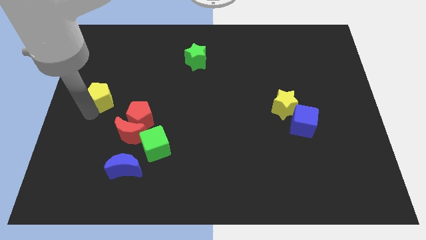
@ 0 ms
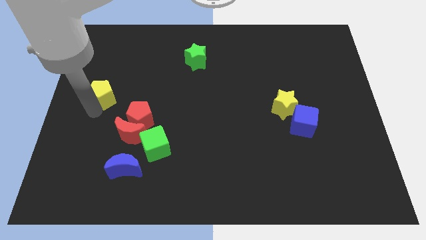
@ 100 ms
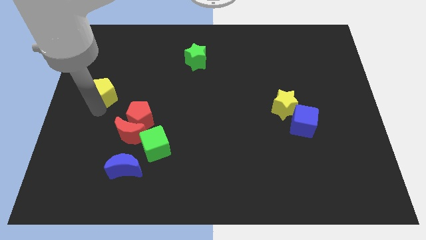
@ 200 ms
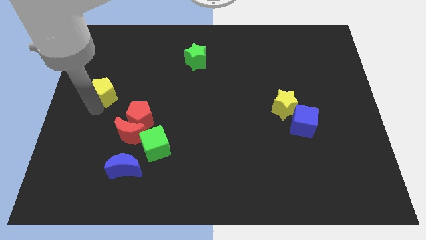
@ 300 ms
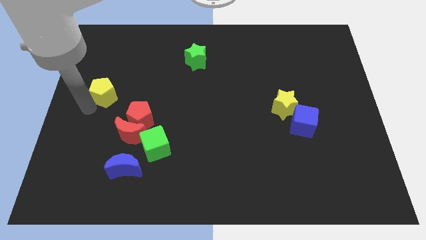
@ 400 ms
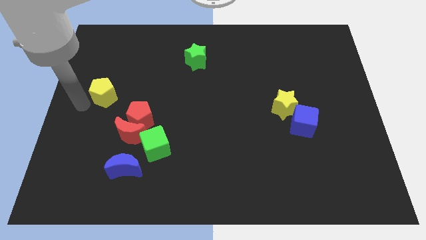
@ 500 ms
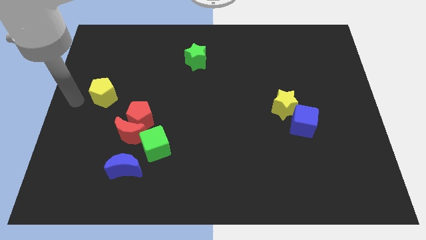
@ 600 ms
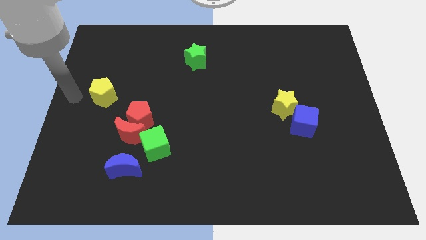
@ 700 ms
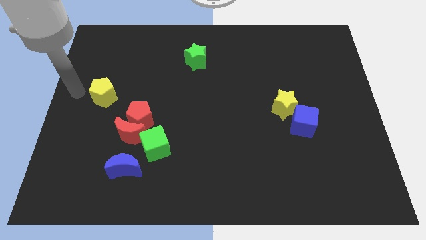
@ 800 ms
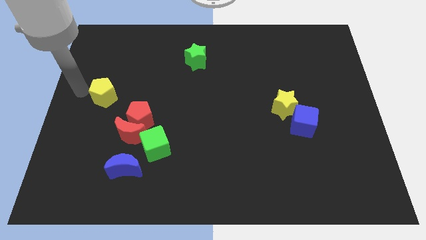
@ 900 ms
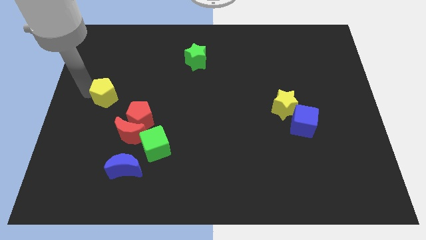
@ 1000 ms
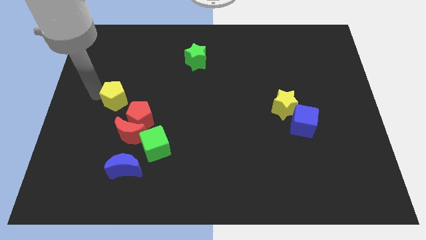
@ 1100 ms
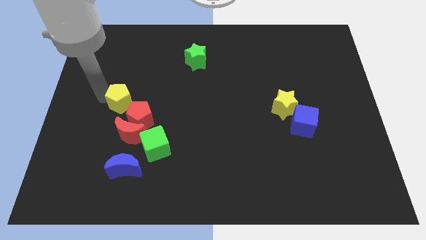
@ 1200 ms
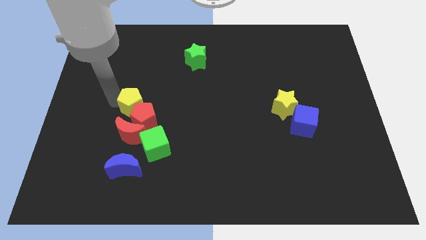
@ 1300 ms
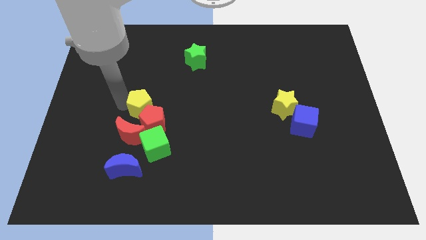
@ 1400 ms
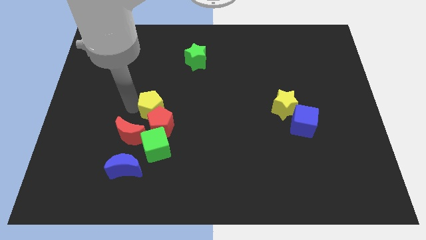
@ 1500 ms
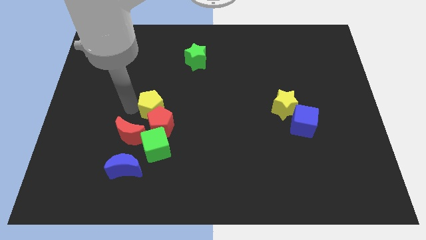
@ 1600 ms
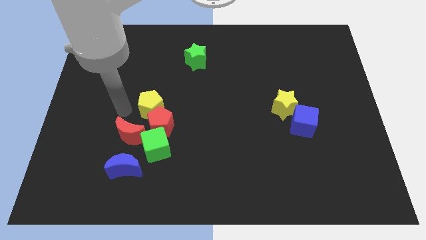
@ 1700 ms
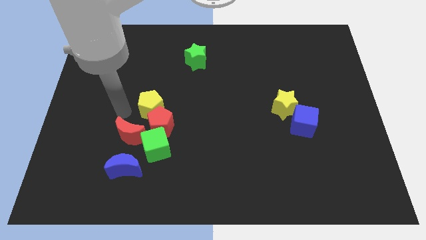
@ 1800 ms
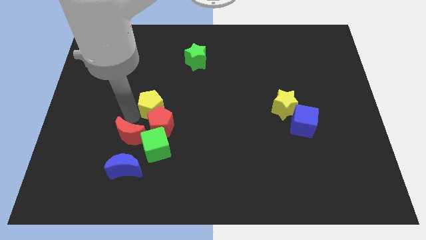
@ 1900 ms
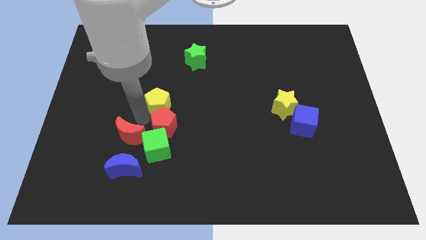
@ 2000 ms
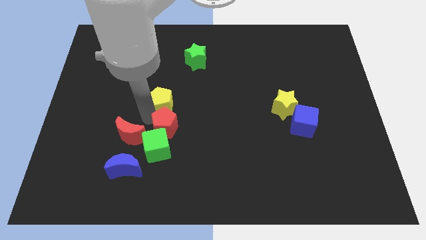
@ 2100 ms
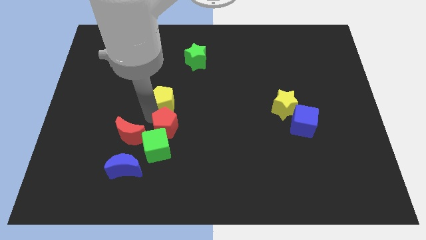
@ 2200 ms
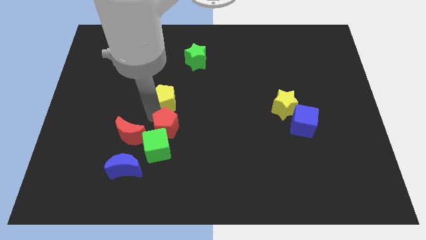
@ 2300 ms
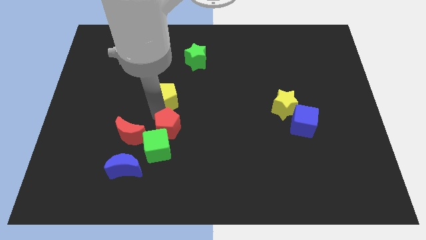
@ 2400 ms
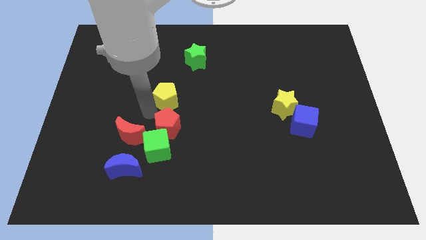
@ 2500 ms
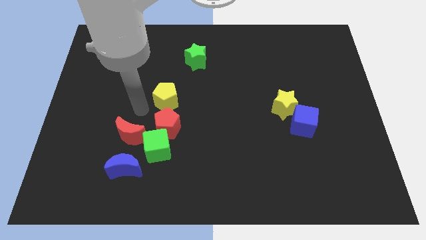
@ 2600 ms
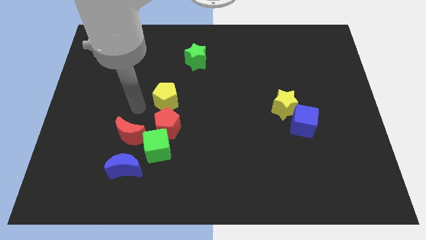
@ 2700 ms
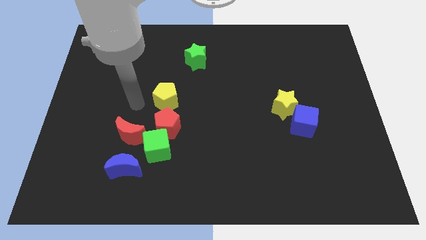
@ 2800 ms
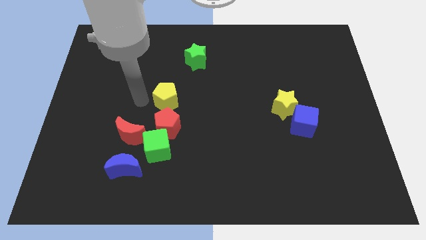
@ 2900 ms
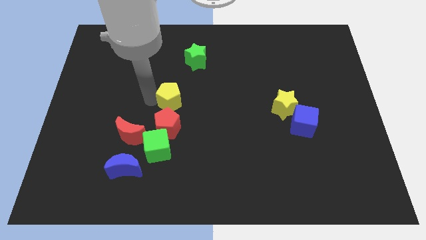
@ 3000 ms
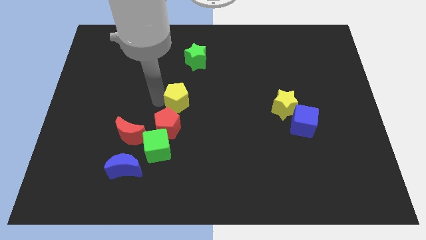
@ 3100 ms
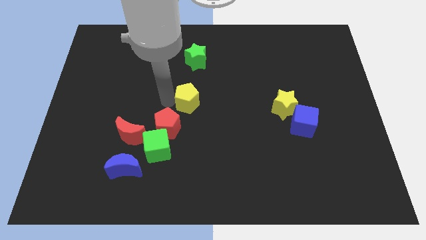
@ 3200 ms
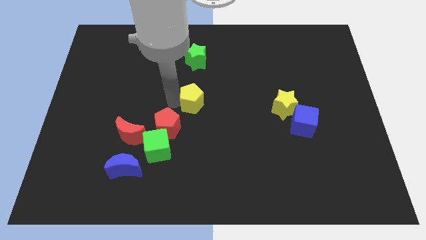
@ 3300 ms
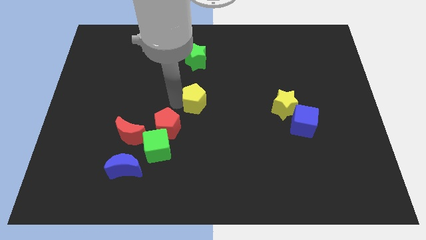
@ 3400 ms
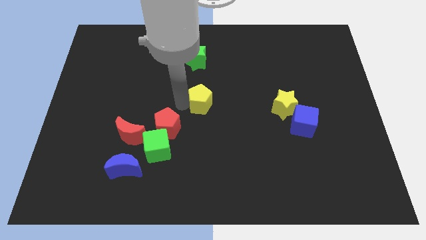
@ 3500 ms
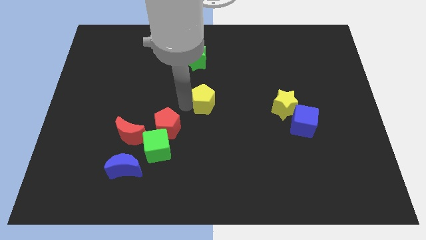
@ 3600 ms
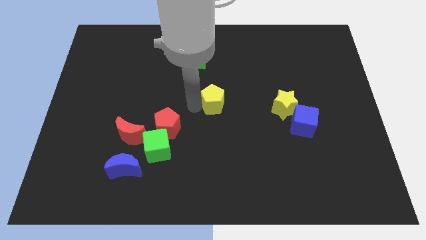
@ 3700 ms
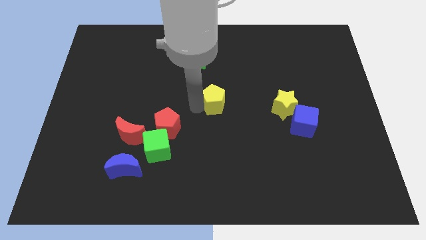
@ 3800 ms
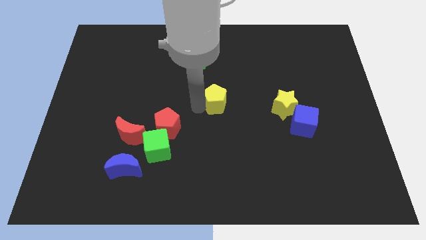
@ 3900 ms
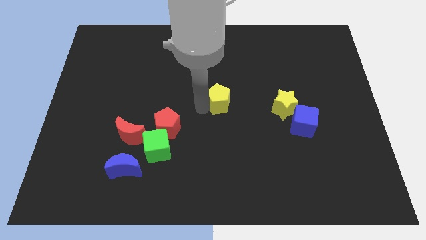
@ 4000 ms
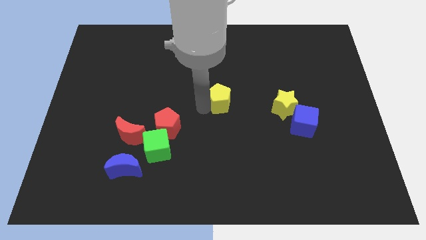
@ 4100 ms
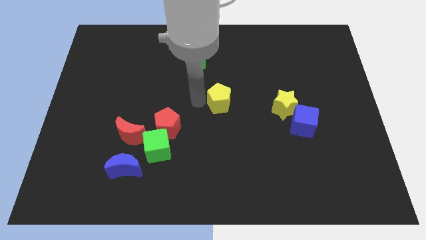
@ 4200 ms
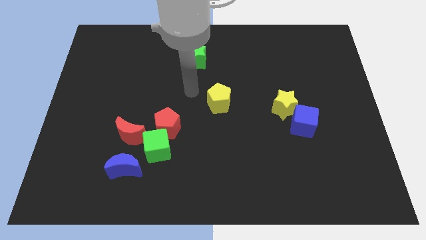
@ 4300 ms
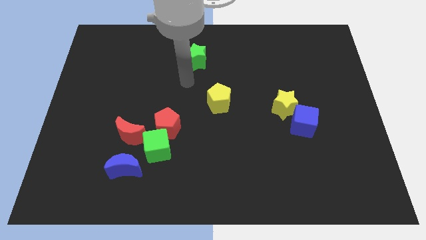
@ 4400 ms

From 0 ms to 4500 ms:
place the yellow pentagon left to the yellow star

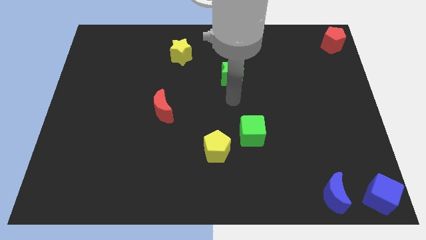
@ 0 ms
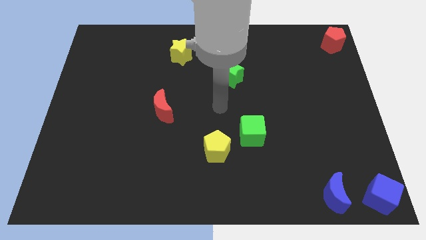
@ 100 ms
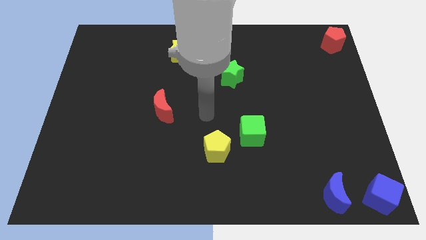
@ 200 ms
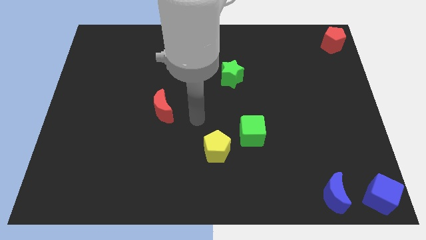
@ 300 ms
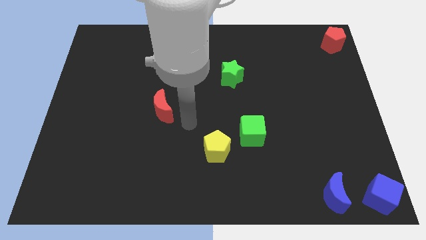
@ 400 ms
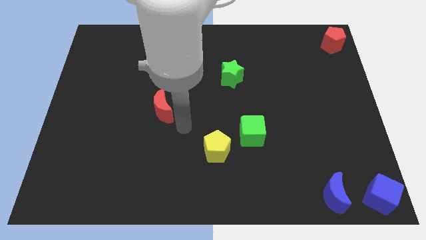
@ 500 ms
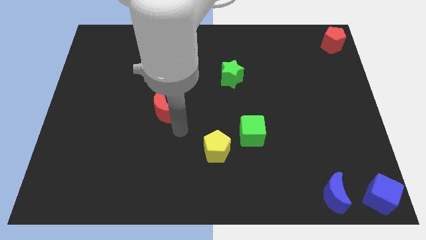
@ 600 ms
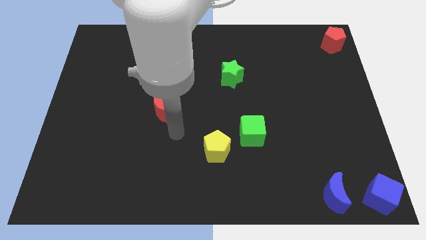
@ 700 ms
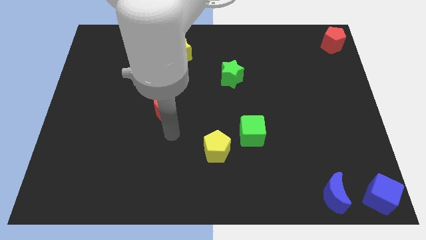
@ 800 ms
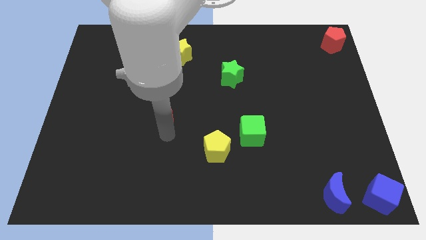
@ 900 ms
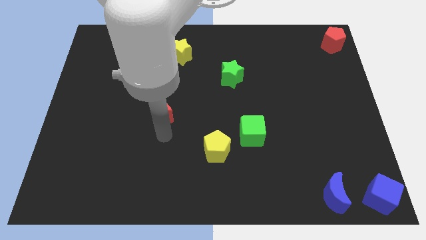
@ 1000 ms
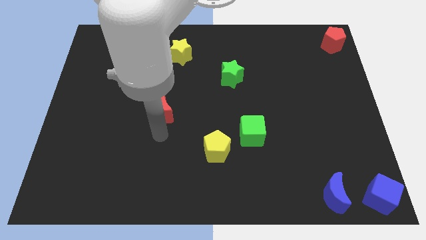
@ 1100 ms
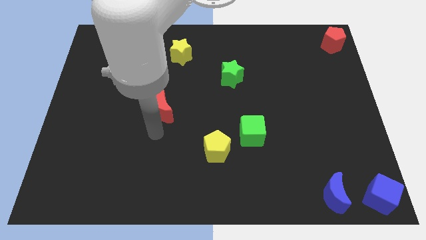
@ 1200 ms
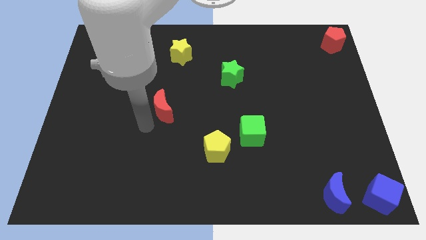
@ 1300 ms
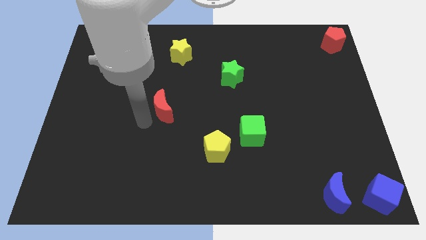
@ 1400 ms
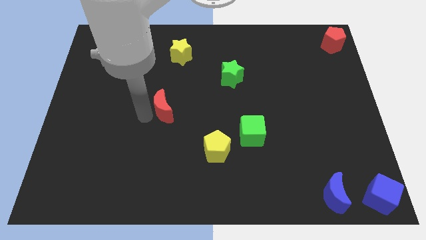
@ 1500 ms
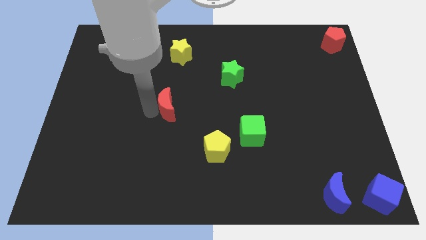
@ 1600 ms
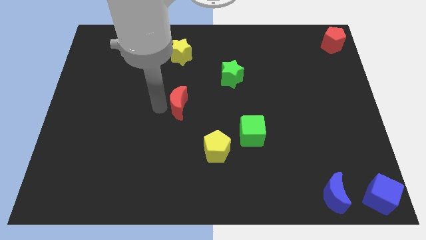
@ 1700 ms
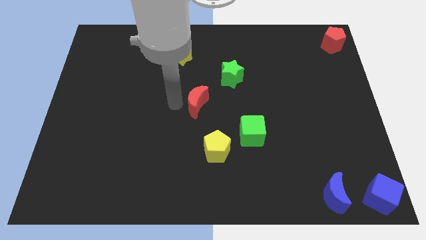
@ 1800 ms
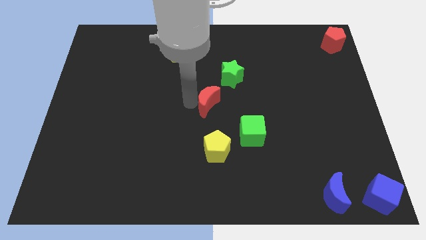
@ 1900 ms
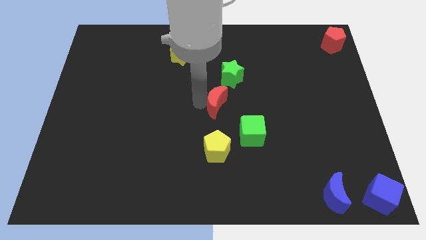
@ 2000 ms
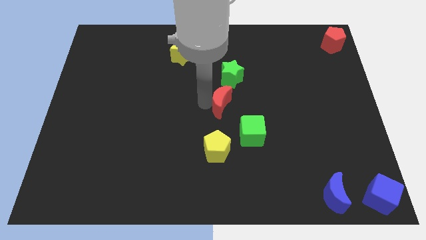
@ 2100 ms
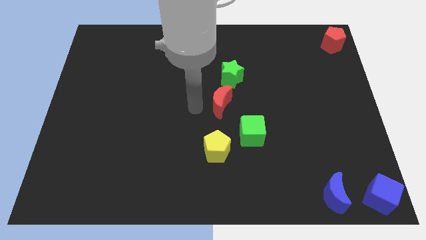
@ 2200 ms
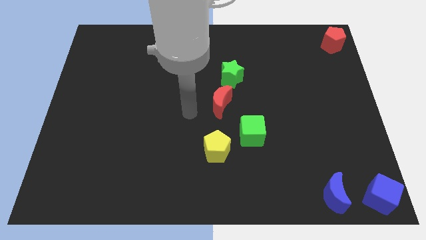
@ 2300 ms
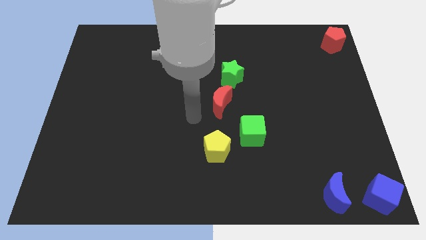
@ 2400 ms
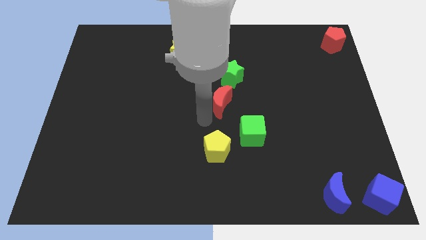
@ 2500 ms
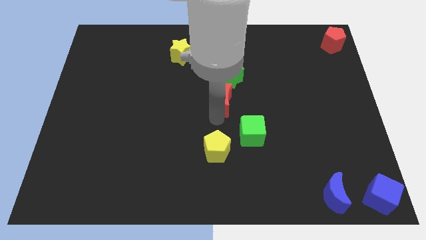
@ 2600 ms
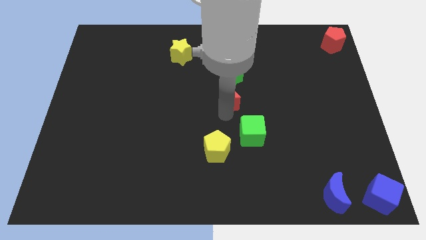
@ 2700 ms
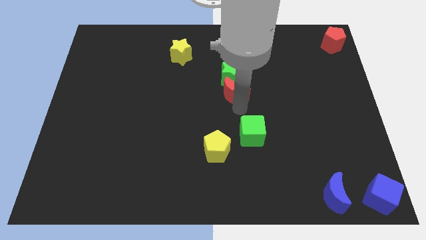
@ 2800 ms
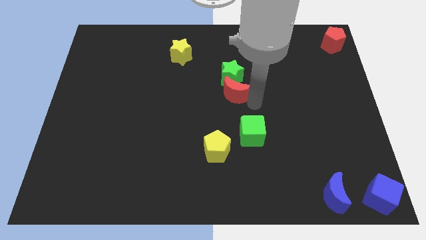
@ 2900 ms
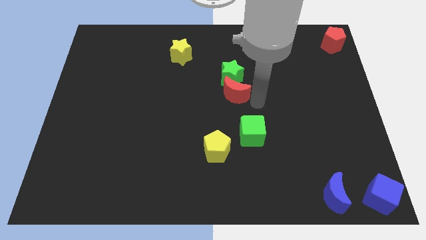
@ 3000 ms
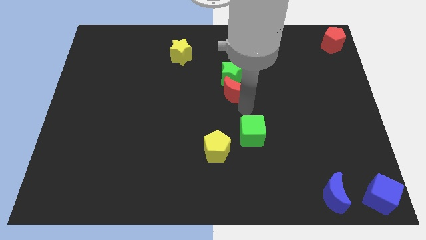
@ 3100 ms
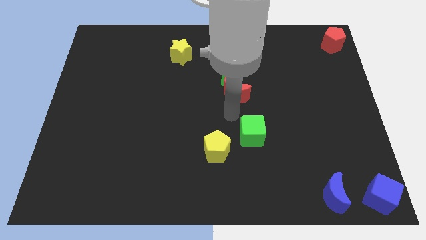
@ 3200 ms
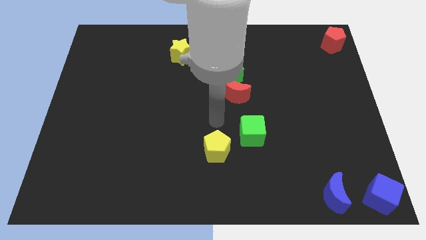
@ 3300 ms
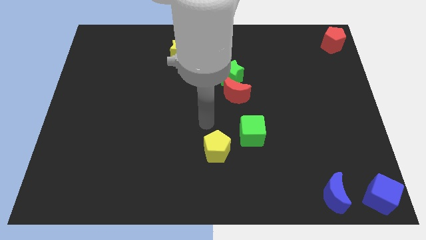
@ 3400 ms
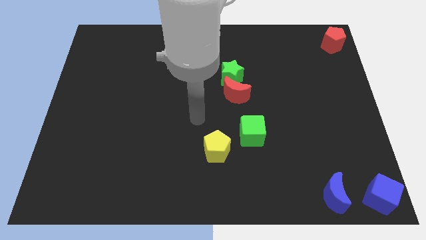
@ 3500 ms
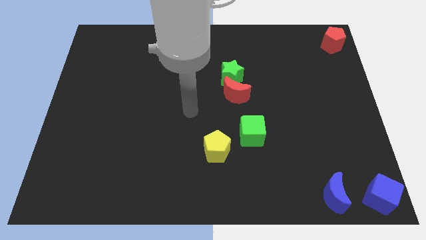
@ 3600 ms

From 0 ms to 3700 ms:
slide the red moon to the bottom of green star

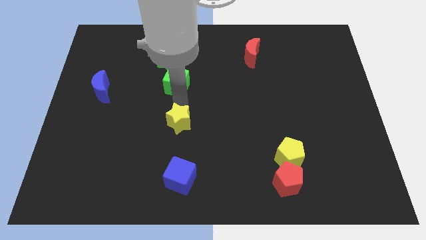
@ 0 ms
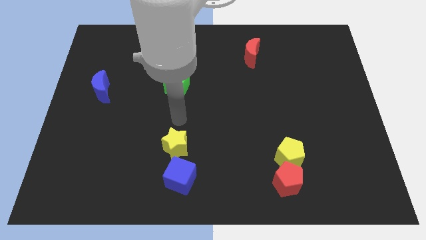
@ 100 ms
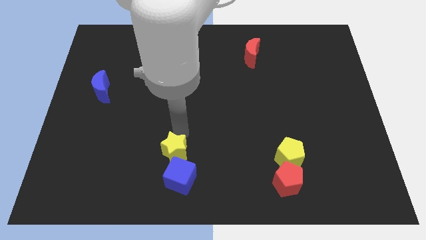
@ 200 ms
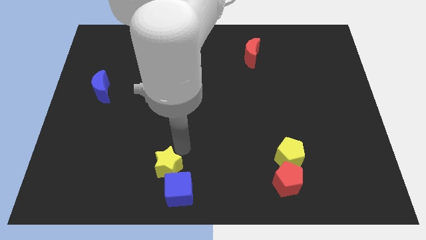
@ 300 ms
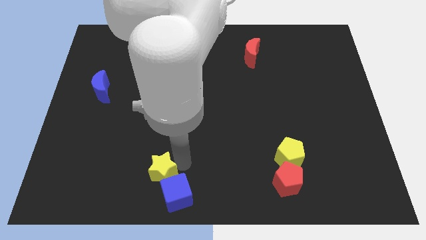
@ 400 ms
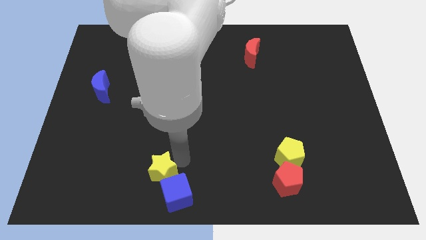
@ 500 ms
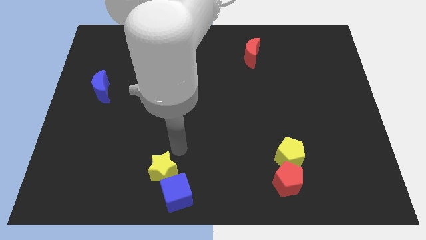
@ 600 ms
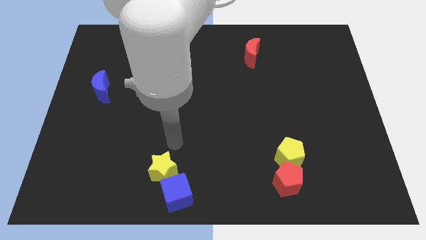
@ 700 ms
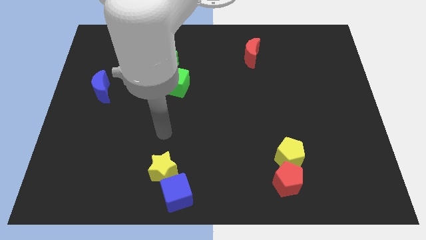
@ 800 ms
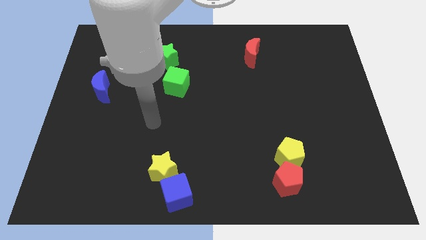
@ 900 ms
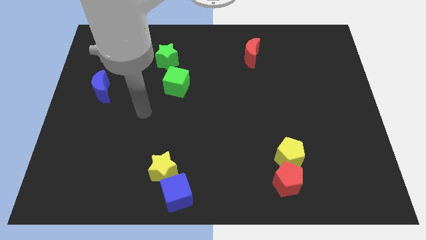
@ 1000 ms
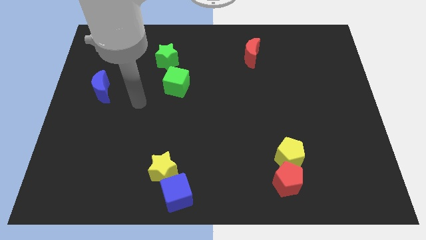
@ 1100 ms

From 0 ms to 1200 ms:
push the yellow star into blue cube
